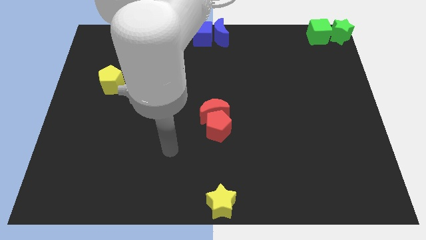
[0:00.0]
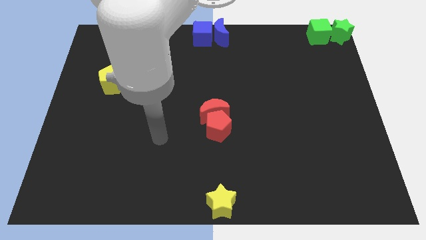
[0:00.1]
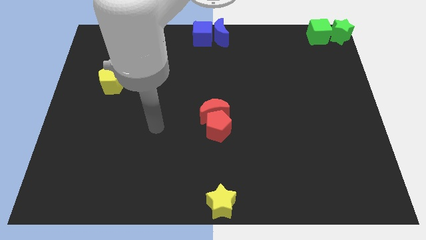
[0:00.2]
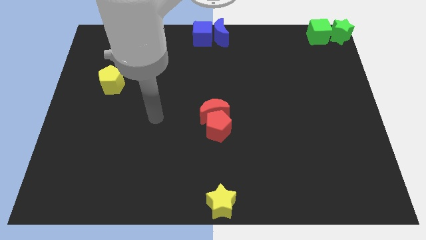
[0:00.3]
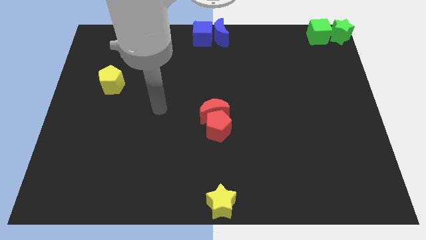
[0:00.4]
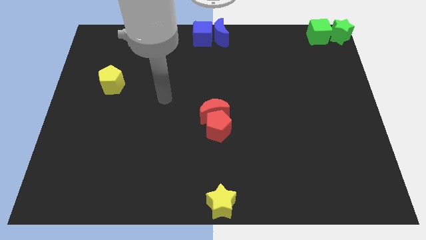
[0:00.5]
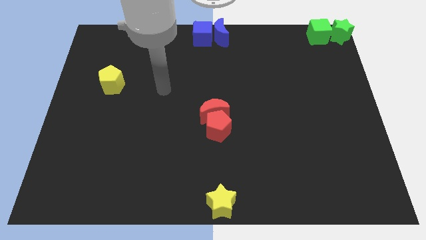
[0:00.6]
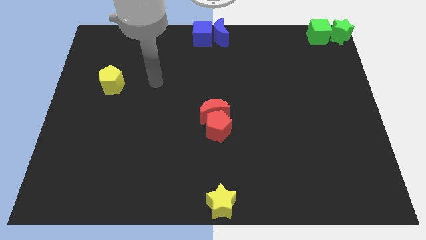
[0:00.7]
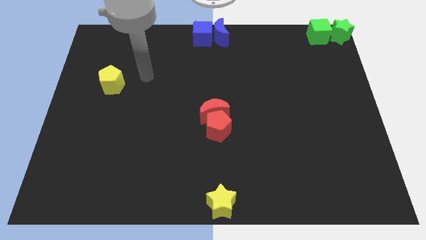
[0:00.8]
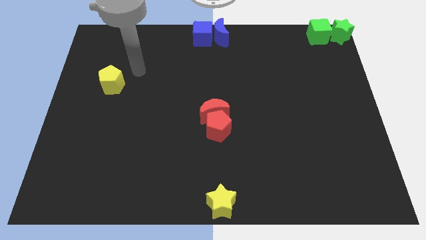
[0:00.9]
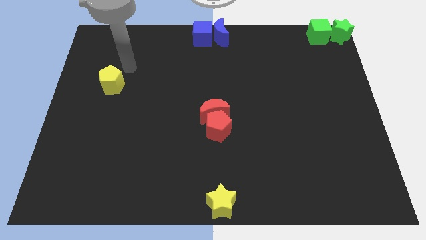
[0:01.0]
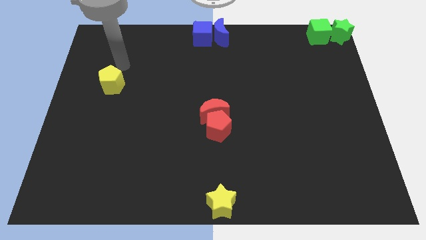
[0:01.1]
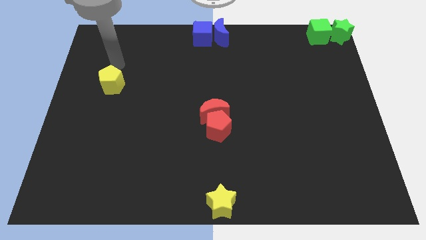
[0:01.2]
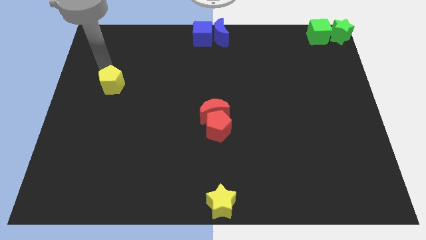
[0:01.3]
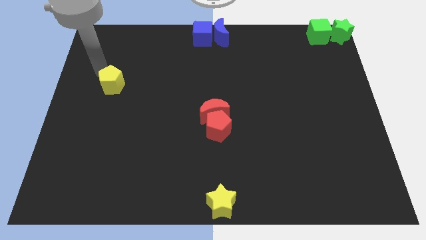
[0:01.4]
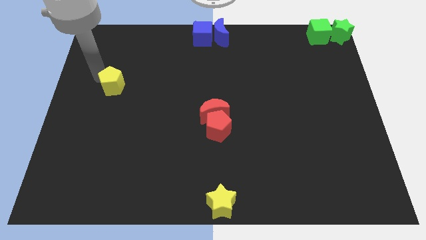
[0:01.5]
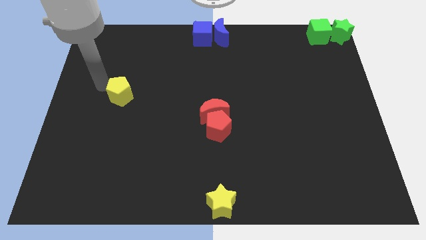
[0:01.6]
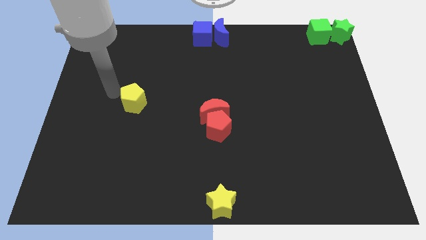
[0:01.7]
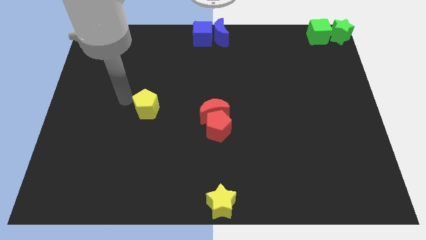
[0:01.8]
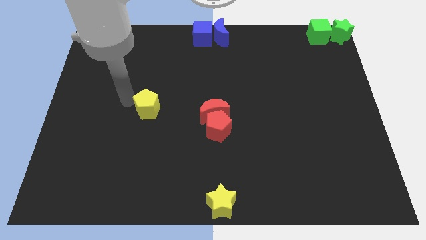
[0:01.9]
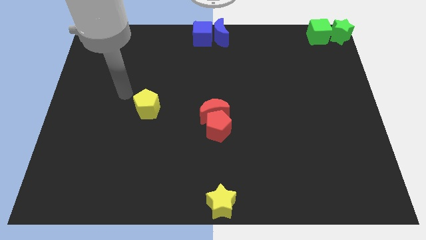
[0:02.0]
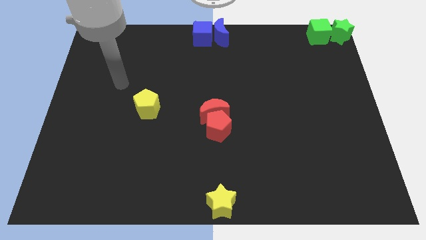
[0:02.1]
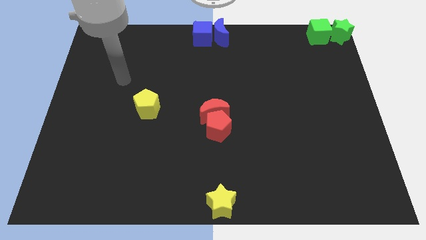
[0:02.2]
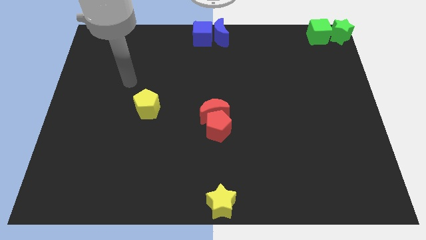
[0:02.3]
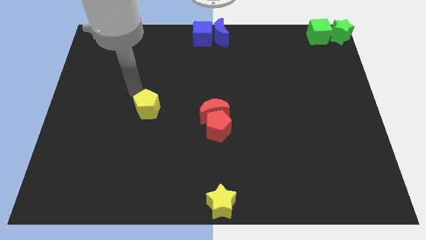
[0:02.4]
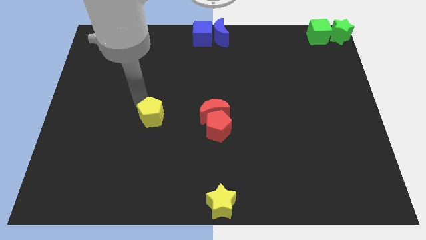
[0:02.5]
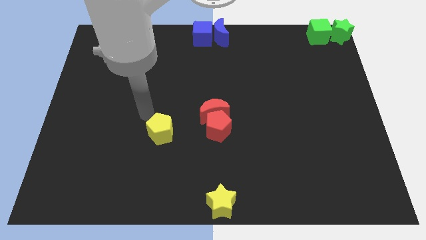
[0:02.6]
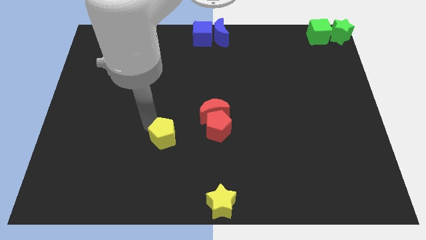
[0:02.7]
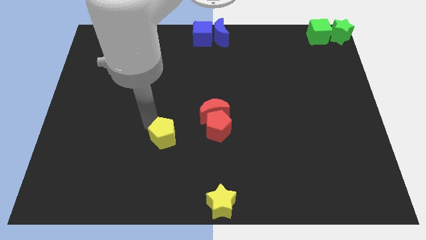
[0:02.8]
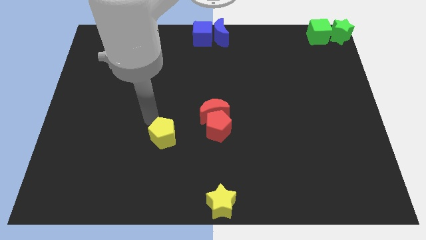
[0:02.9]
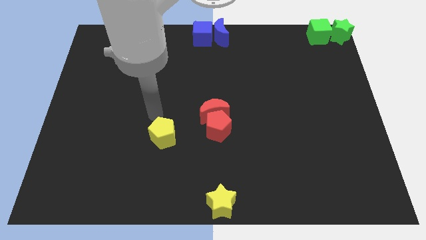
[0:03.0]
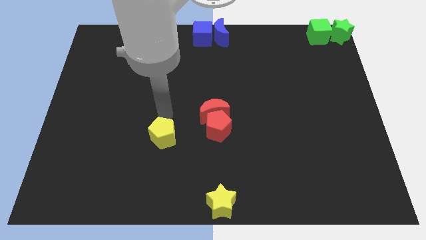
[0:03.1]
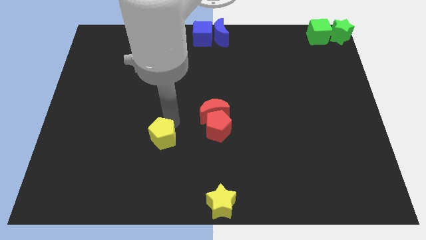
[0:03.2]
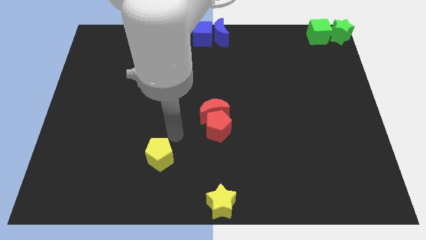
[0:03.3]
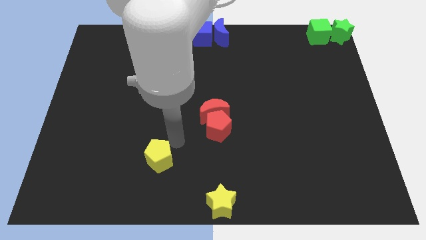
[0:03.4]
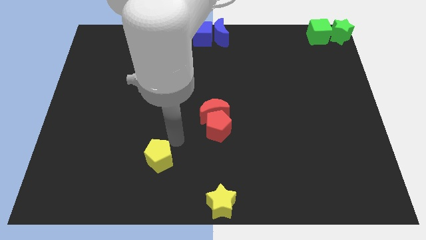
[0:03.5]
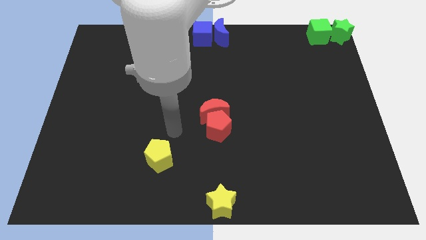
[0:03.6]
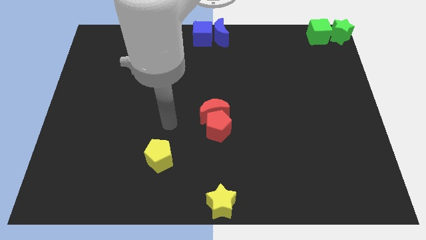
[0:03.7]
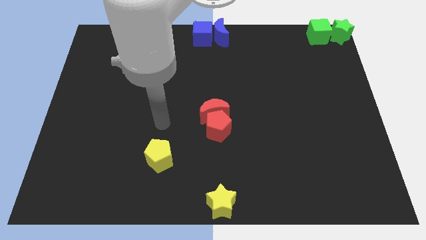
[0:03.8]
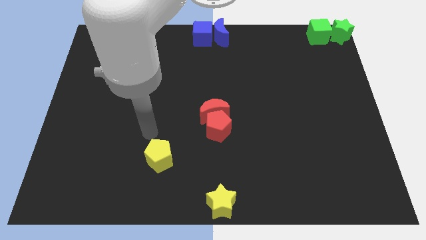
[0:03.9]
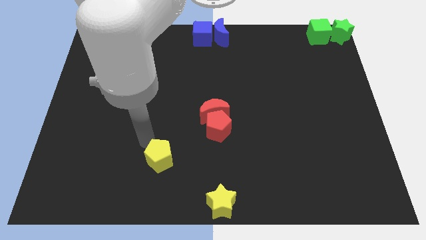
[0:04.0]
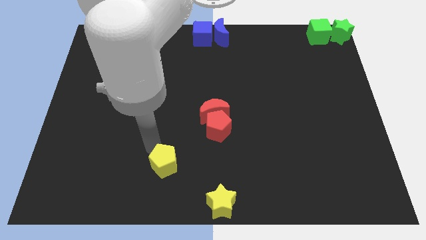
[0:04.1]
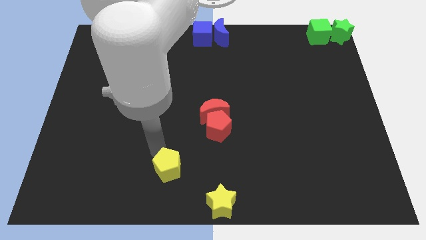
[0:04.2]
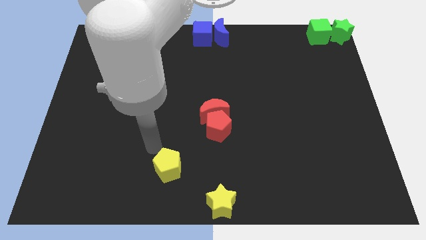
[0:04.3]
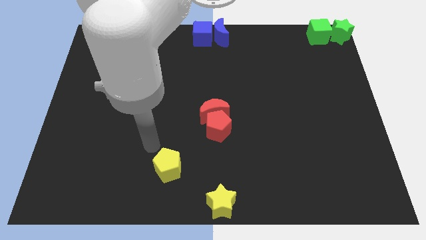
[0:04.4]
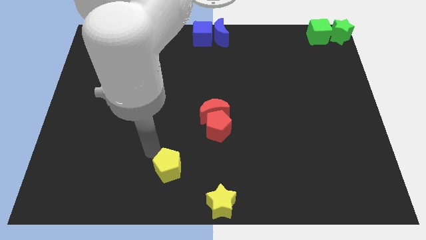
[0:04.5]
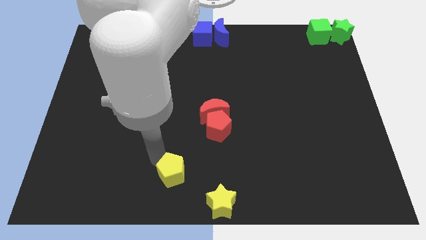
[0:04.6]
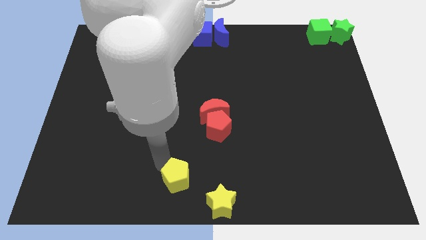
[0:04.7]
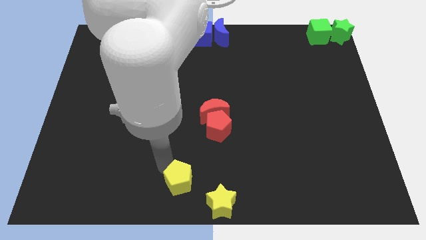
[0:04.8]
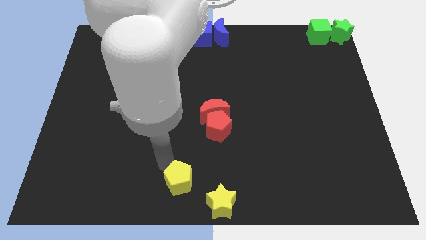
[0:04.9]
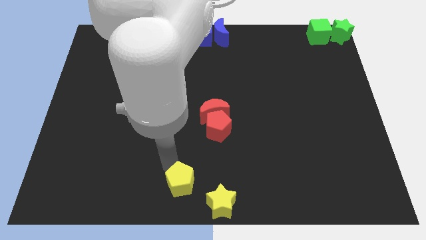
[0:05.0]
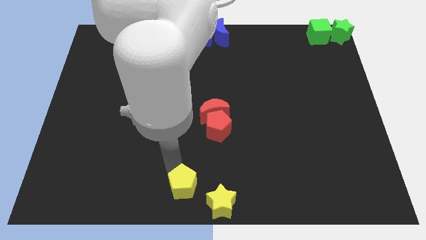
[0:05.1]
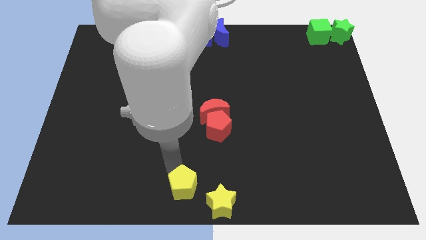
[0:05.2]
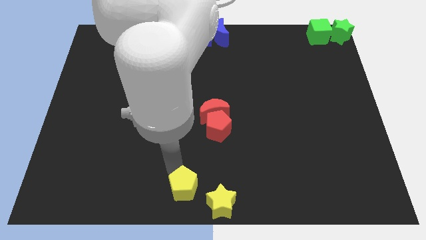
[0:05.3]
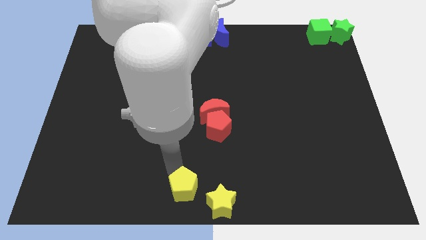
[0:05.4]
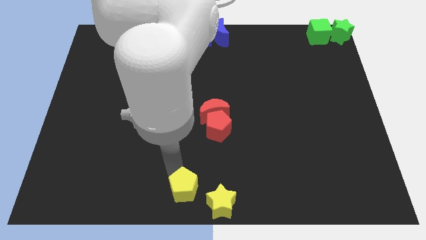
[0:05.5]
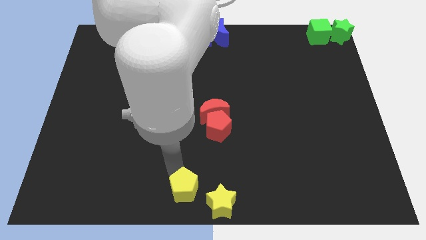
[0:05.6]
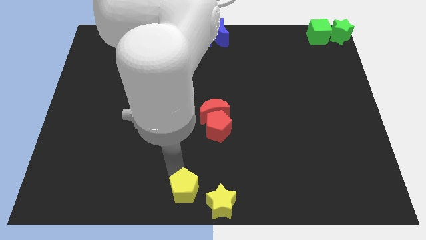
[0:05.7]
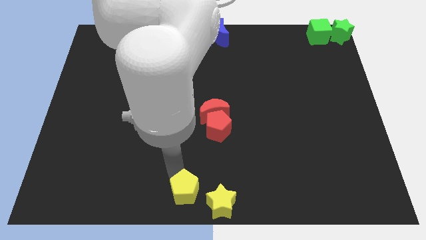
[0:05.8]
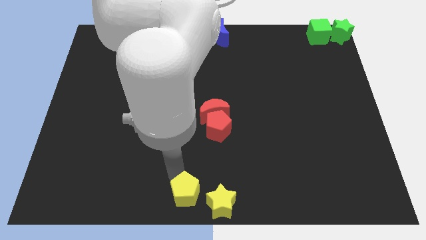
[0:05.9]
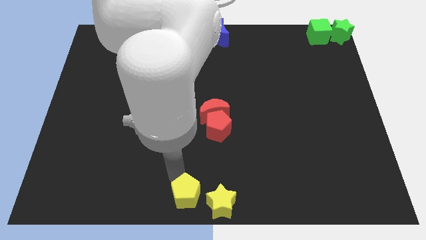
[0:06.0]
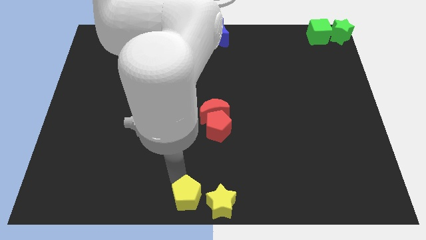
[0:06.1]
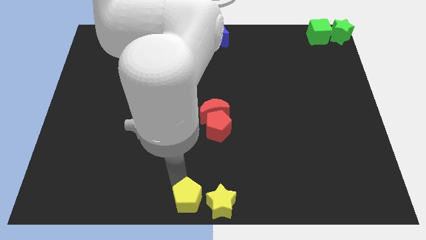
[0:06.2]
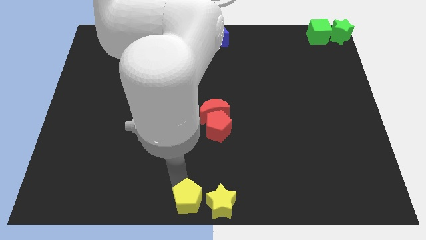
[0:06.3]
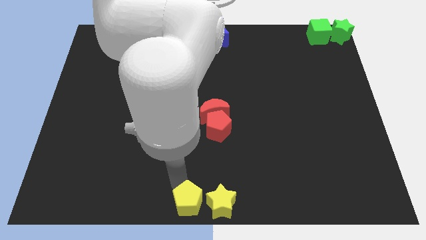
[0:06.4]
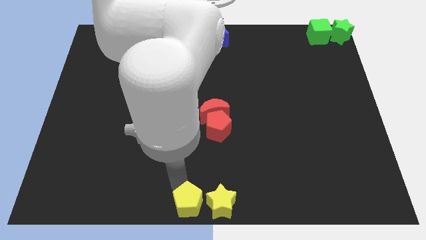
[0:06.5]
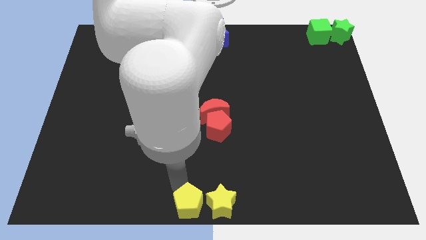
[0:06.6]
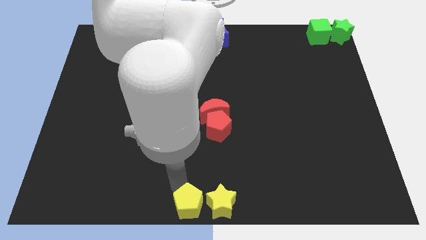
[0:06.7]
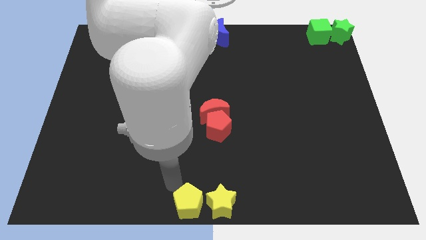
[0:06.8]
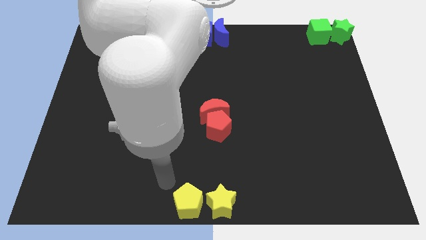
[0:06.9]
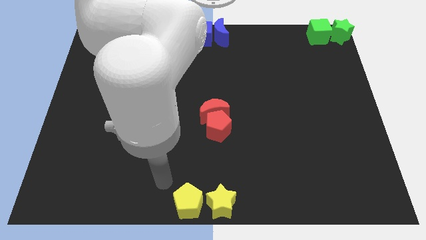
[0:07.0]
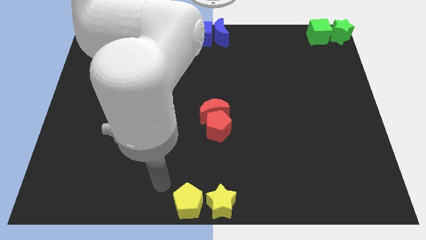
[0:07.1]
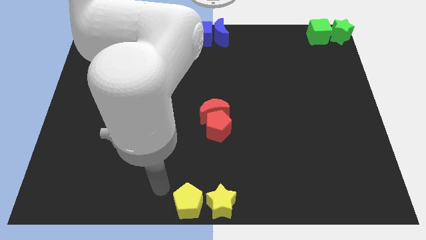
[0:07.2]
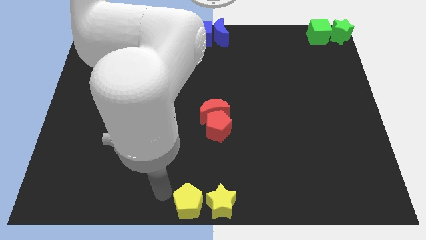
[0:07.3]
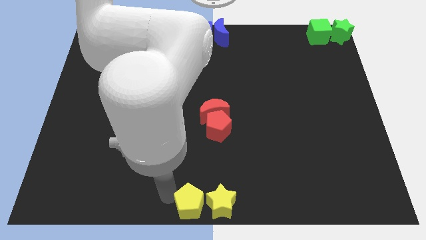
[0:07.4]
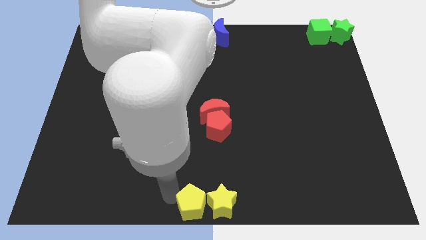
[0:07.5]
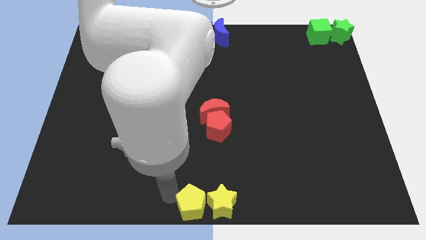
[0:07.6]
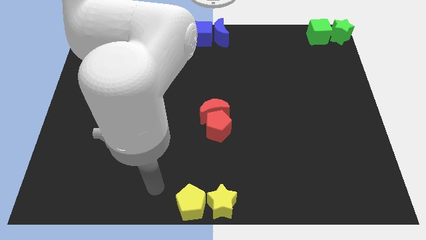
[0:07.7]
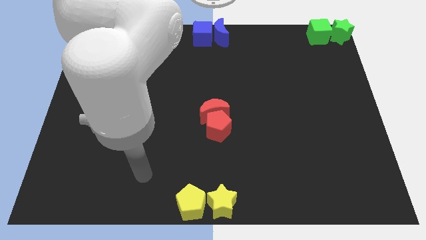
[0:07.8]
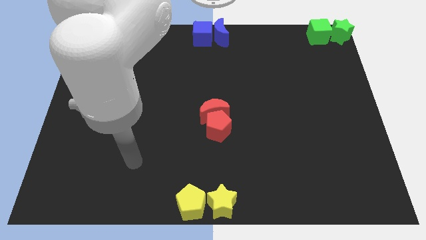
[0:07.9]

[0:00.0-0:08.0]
push the group of yellow blocks together at the bottom center of the board

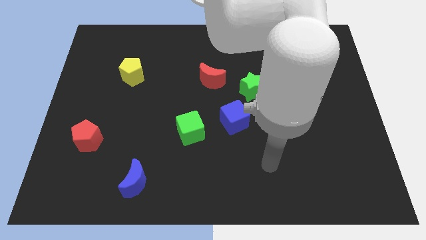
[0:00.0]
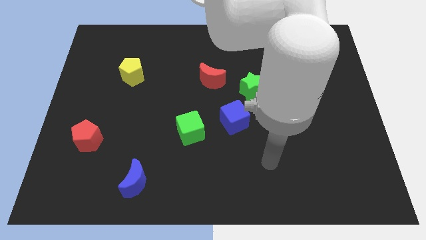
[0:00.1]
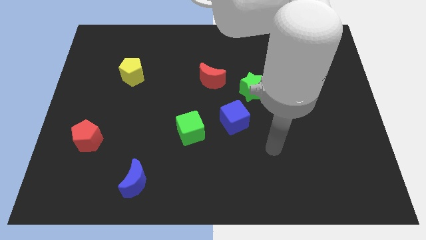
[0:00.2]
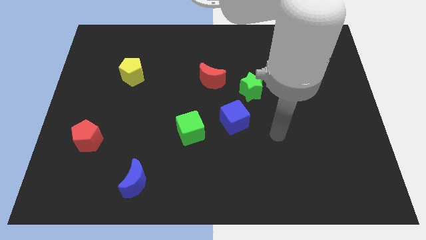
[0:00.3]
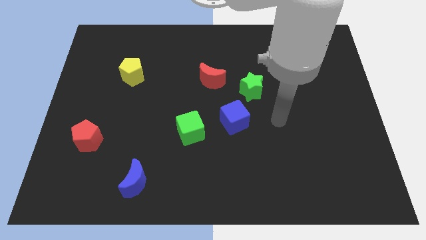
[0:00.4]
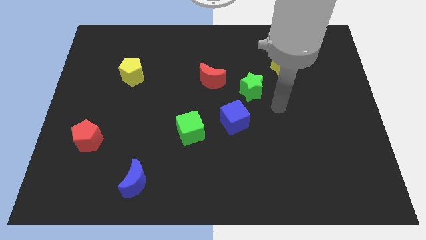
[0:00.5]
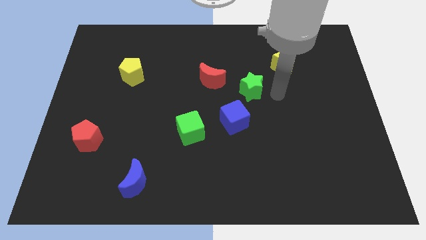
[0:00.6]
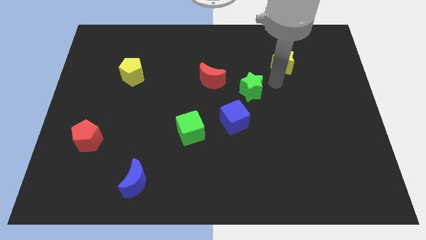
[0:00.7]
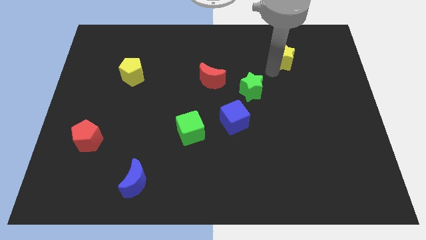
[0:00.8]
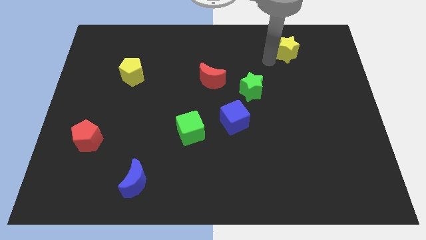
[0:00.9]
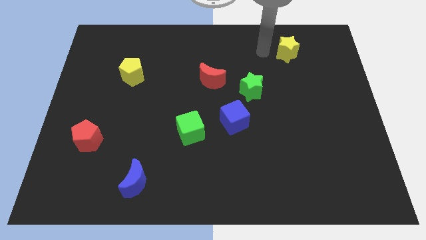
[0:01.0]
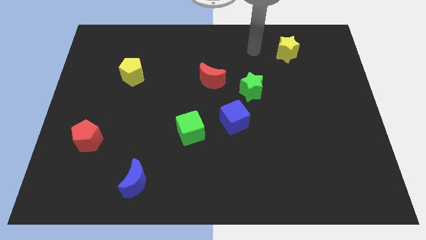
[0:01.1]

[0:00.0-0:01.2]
slightly move the yellow star to the top right of the board
